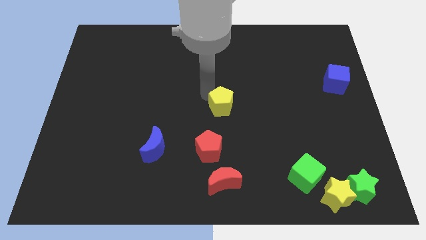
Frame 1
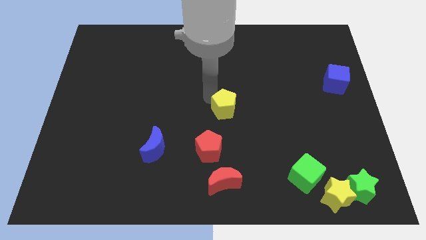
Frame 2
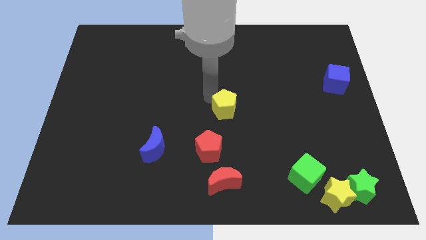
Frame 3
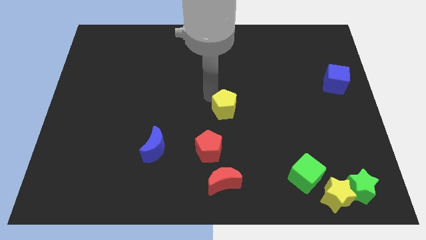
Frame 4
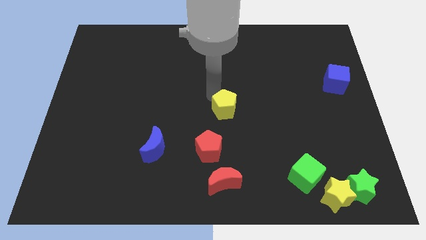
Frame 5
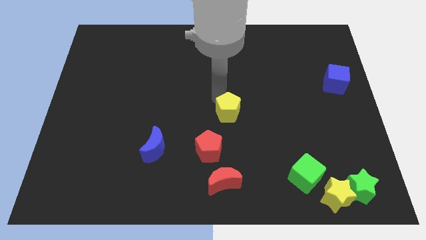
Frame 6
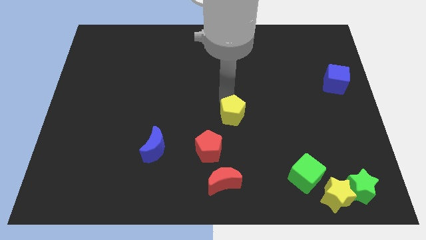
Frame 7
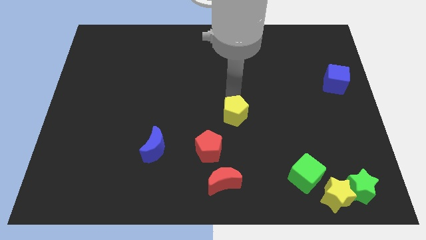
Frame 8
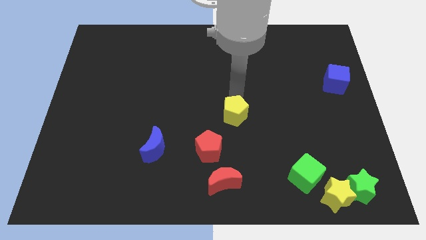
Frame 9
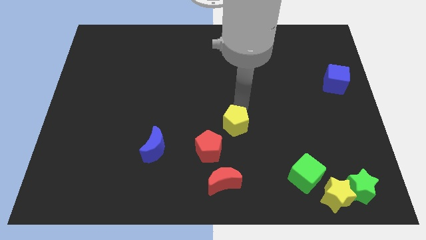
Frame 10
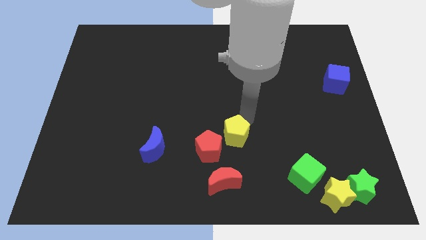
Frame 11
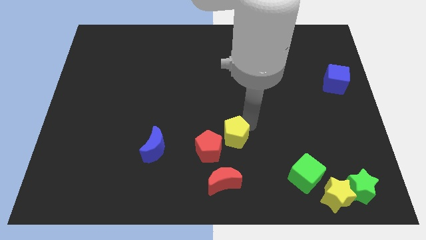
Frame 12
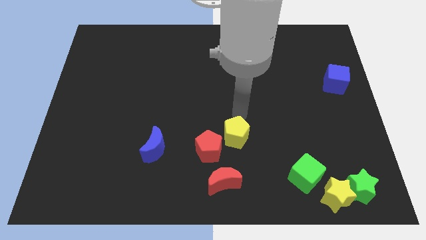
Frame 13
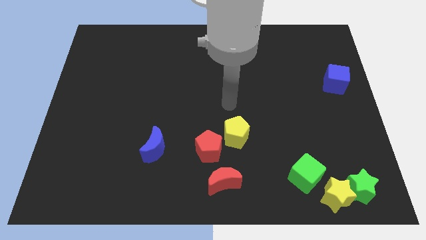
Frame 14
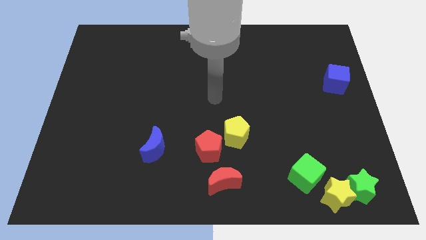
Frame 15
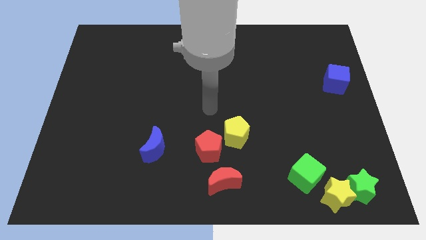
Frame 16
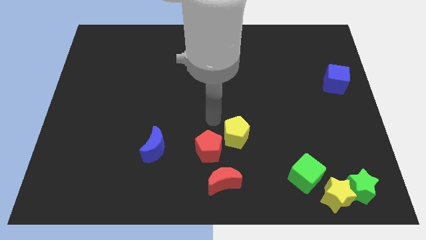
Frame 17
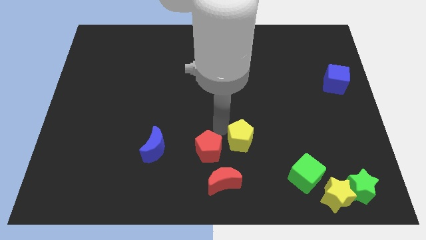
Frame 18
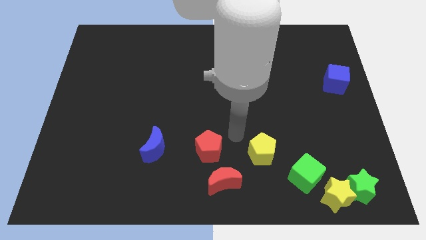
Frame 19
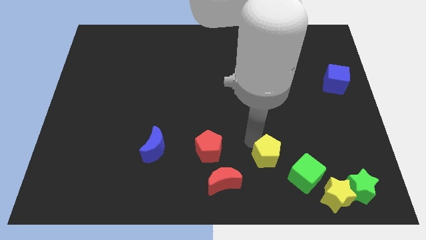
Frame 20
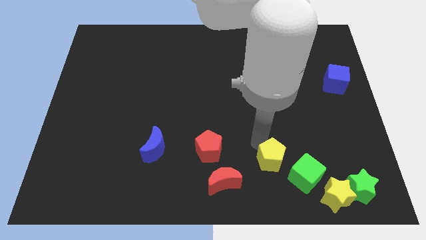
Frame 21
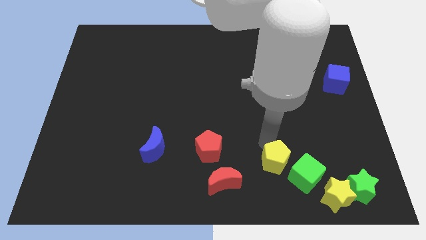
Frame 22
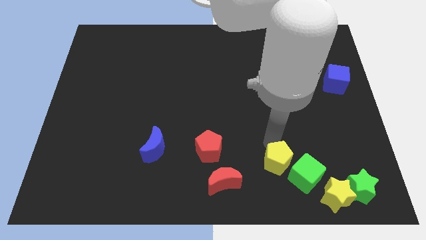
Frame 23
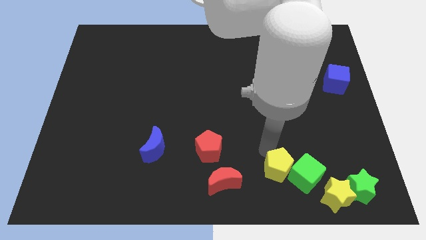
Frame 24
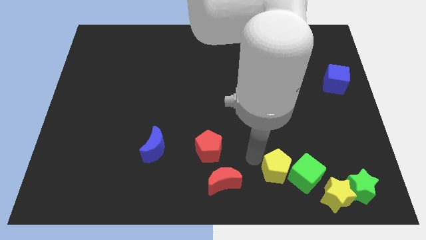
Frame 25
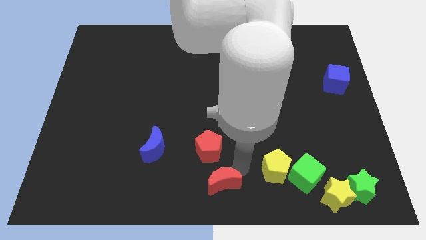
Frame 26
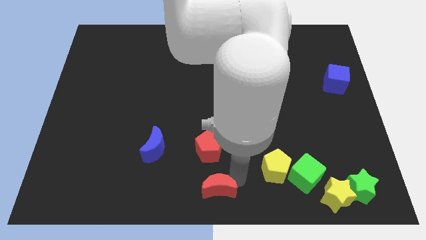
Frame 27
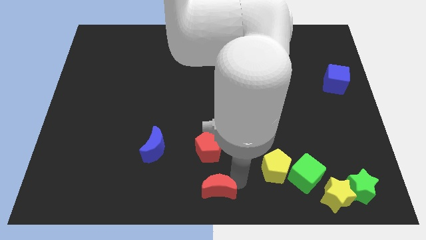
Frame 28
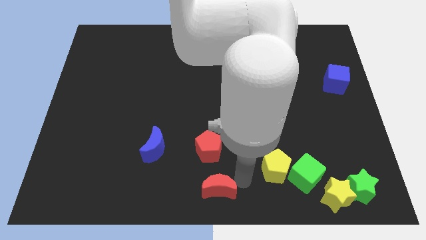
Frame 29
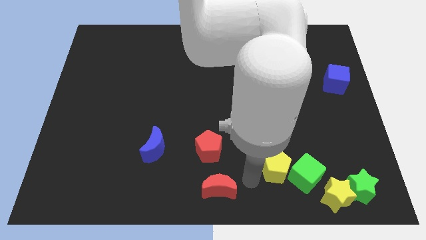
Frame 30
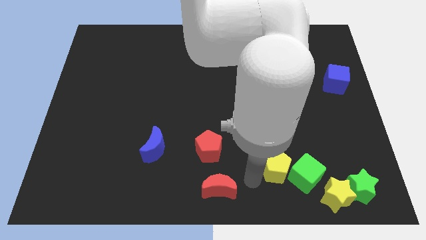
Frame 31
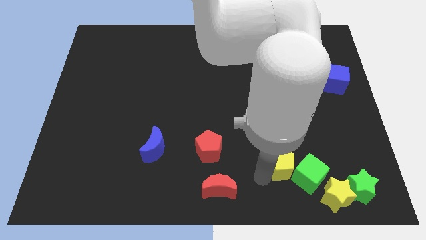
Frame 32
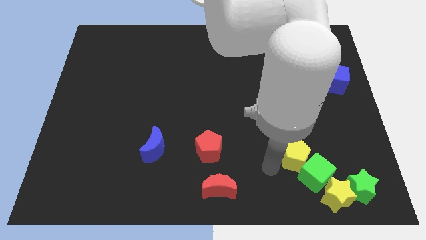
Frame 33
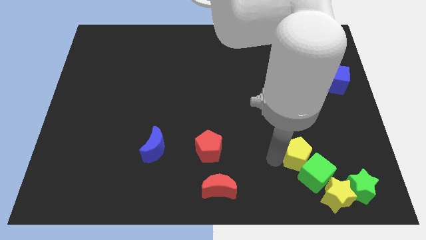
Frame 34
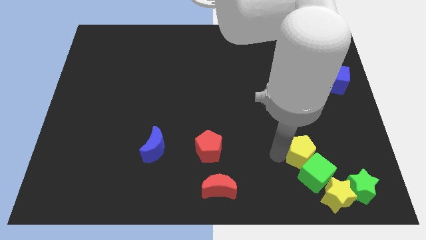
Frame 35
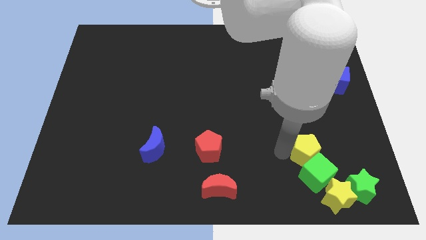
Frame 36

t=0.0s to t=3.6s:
attach the yellow pentagon to the green cube

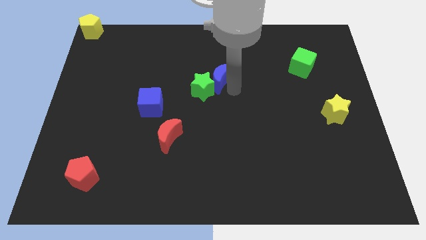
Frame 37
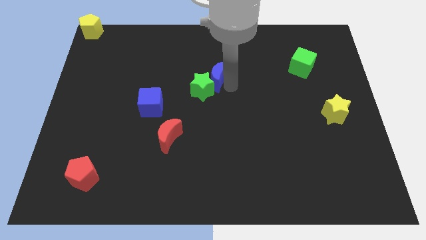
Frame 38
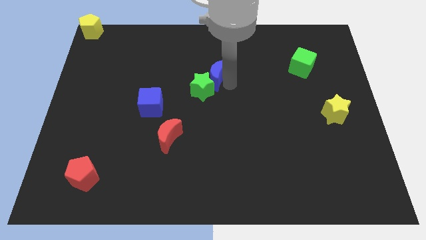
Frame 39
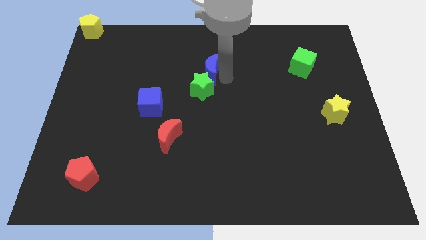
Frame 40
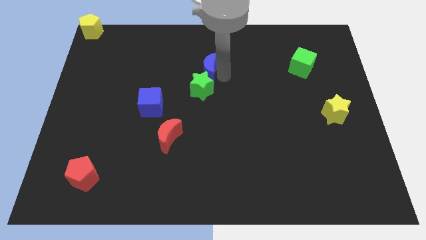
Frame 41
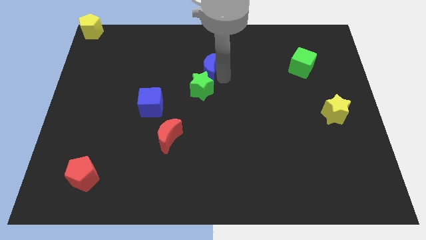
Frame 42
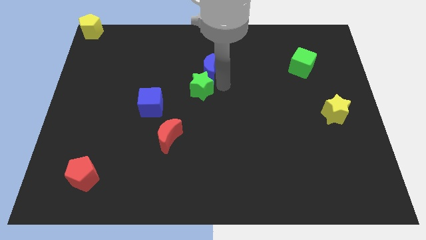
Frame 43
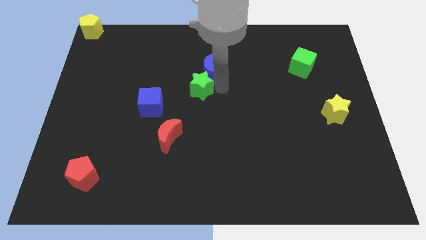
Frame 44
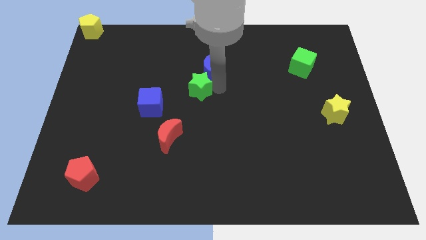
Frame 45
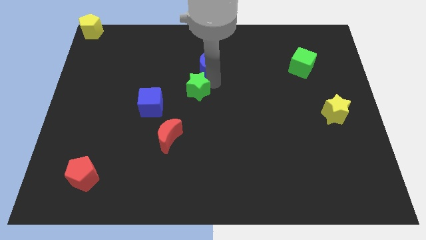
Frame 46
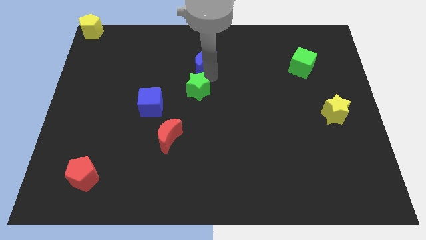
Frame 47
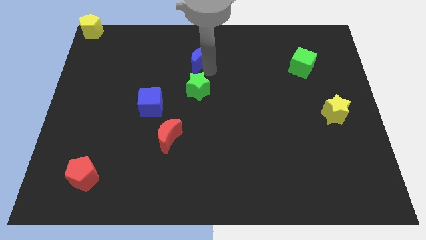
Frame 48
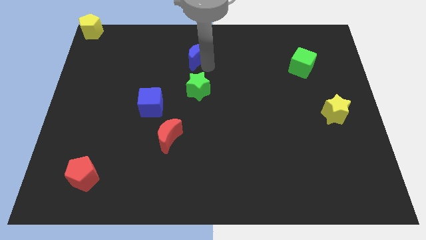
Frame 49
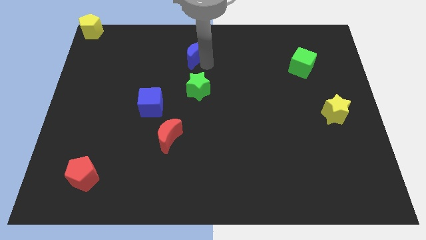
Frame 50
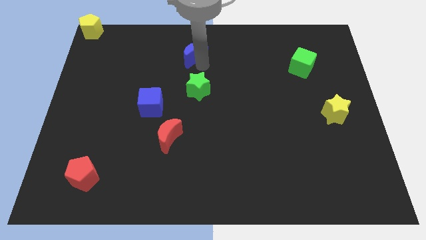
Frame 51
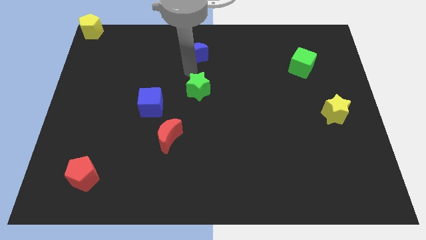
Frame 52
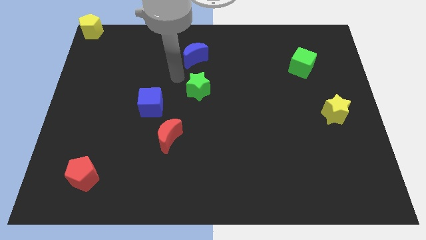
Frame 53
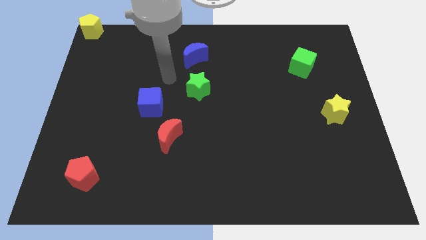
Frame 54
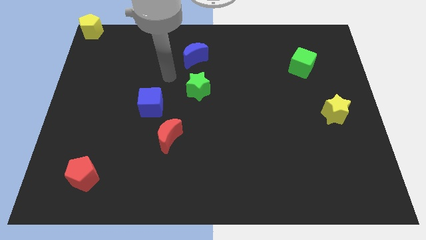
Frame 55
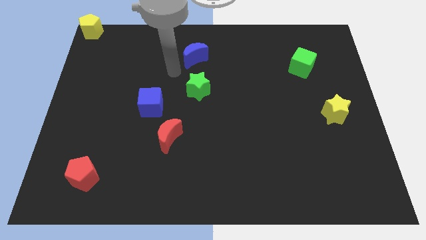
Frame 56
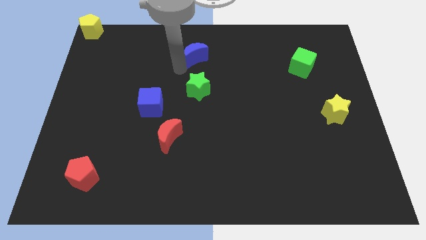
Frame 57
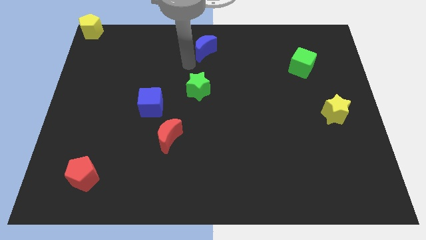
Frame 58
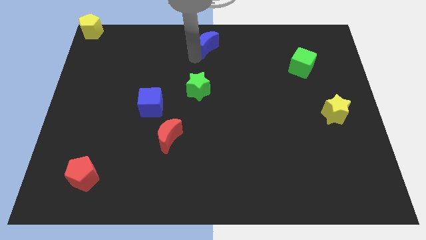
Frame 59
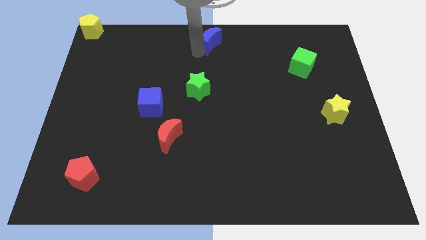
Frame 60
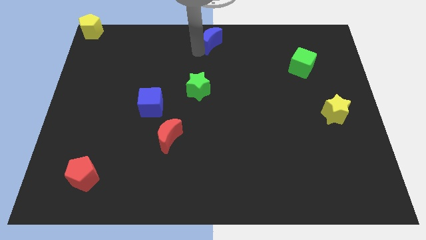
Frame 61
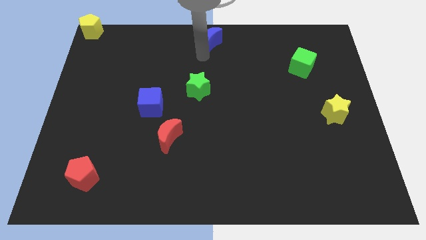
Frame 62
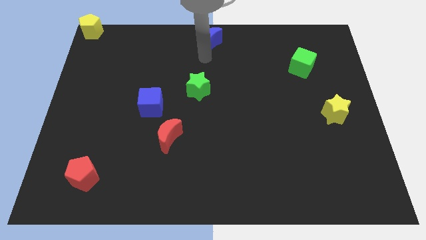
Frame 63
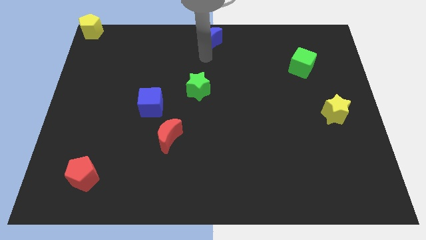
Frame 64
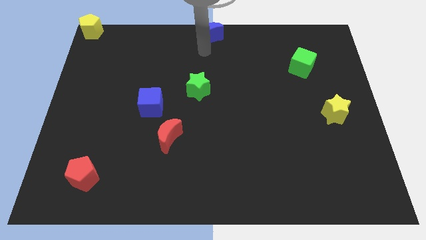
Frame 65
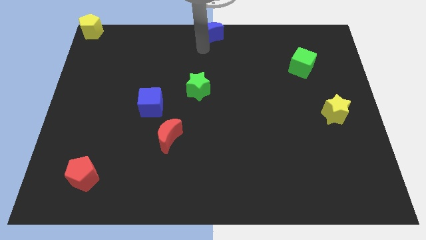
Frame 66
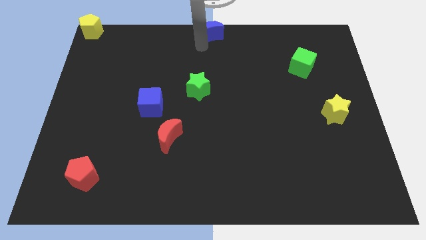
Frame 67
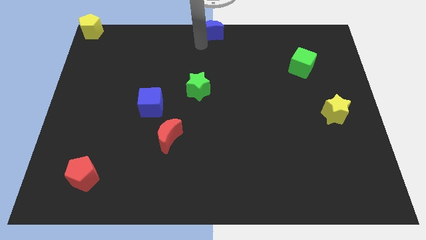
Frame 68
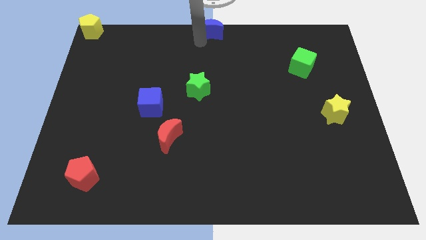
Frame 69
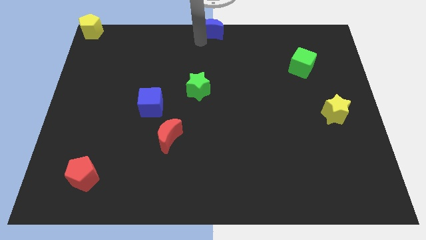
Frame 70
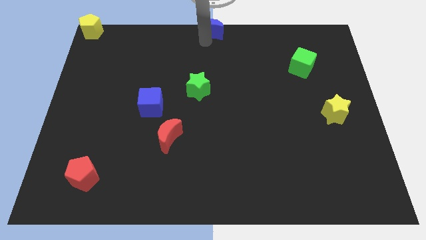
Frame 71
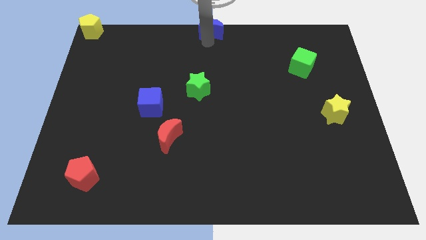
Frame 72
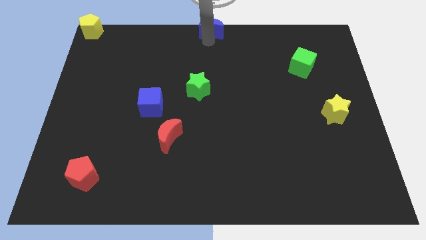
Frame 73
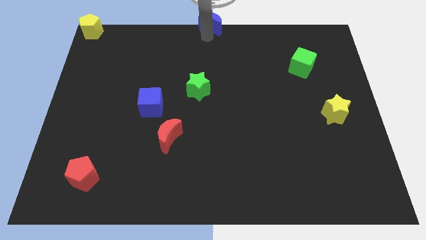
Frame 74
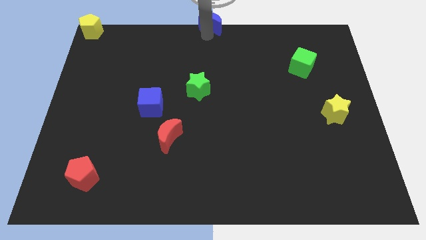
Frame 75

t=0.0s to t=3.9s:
place the blue moon at the top center of the board

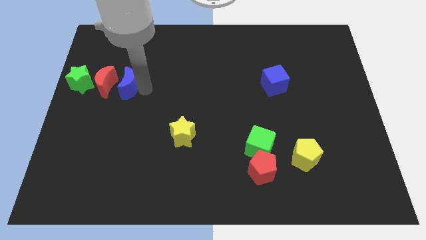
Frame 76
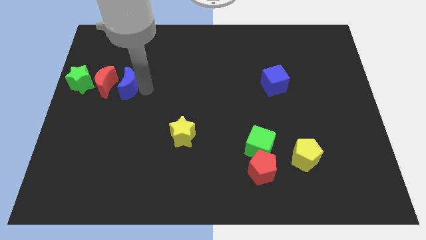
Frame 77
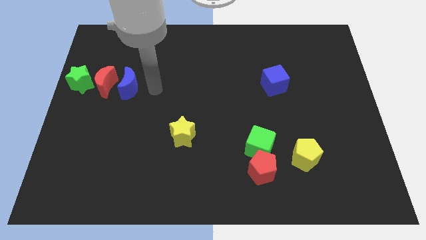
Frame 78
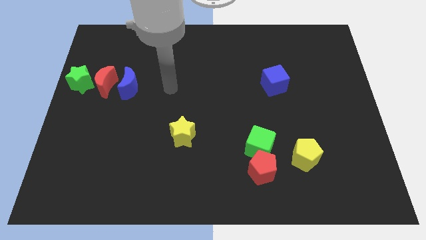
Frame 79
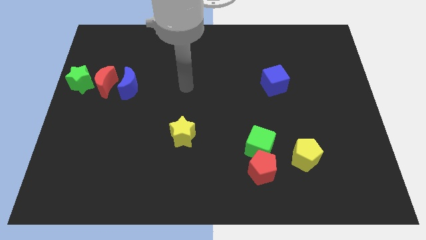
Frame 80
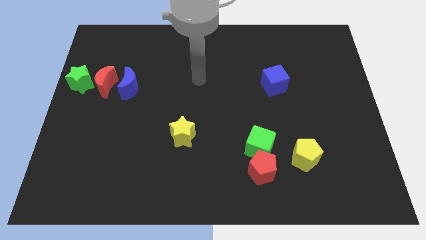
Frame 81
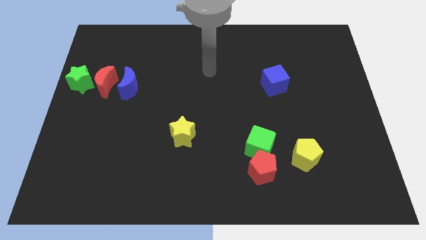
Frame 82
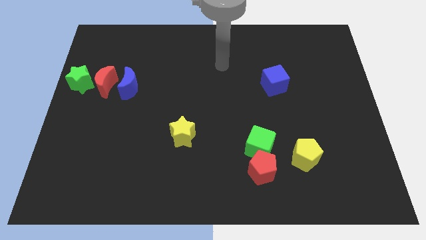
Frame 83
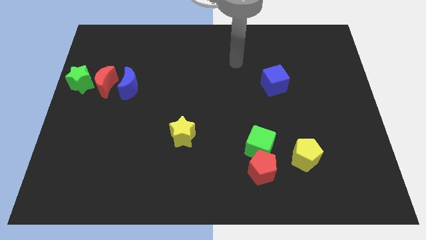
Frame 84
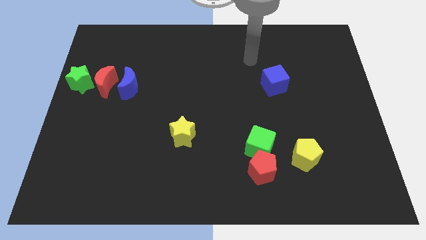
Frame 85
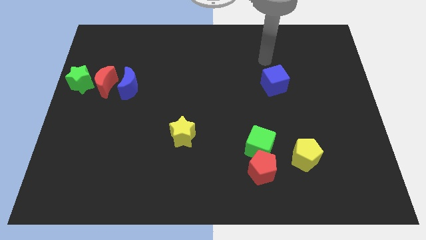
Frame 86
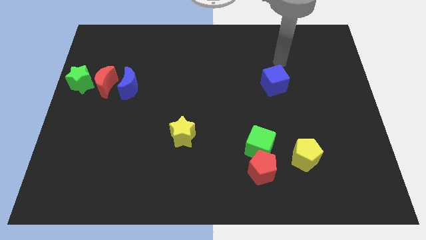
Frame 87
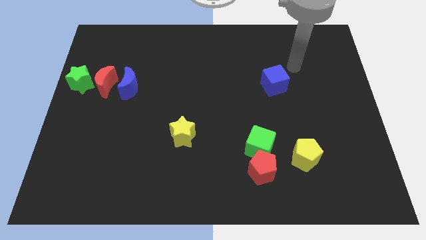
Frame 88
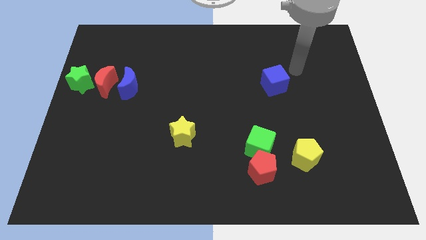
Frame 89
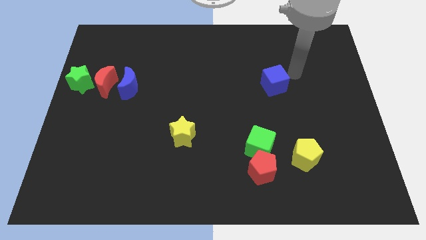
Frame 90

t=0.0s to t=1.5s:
move your arm to the right side of the blue cube
